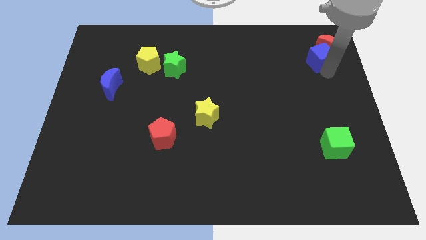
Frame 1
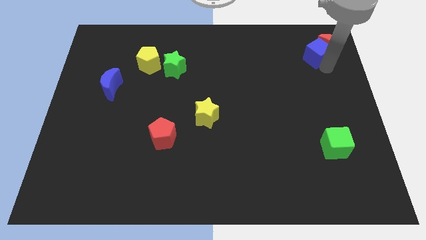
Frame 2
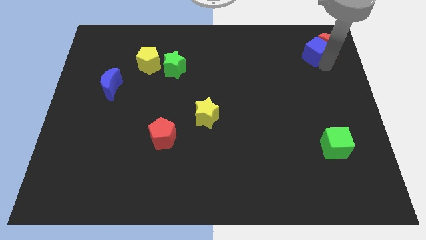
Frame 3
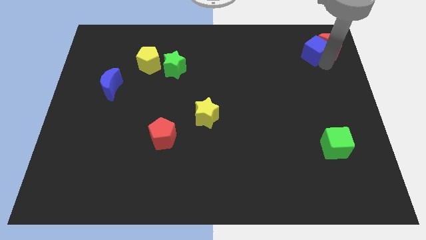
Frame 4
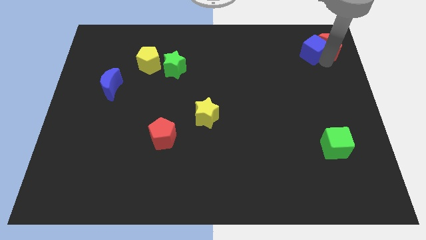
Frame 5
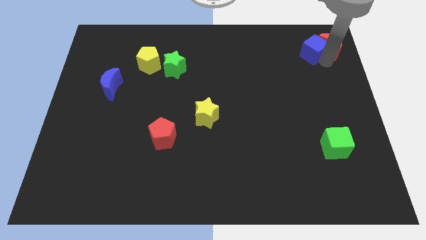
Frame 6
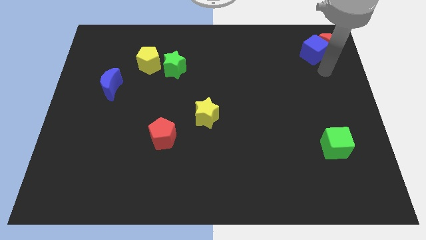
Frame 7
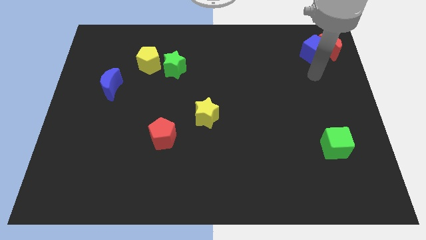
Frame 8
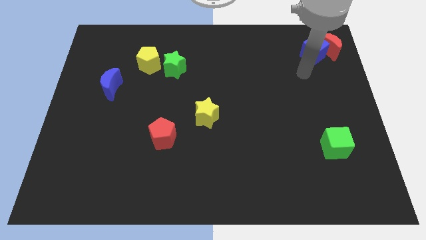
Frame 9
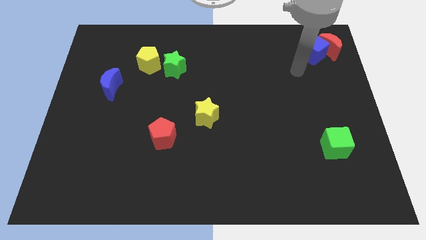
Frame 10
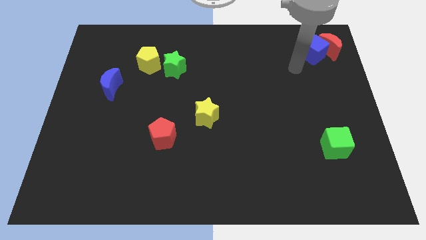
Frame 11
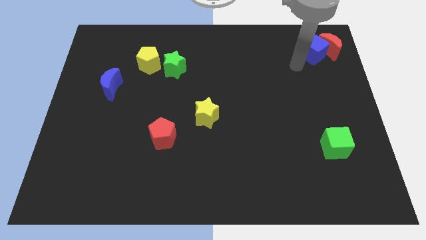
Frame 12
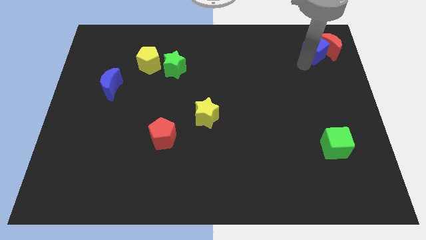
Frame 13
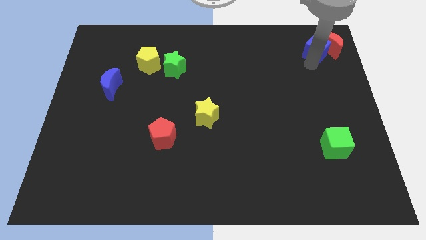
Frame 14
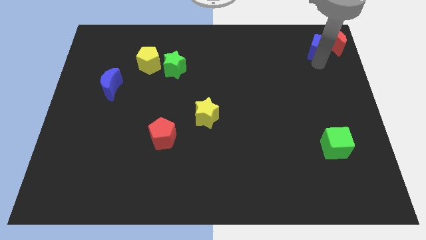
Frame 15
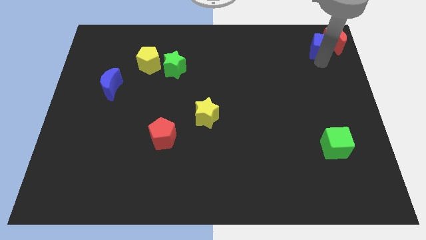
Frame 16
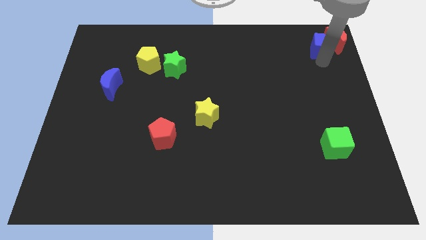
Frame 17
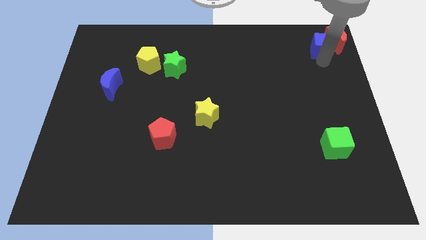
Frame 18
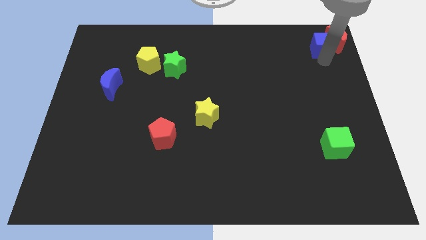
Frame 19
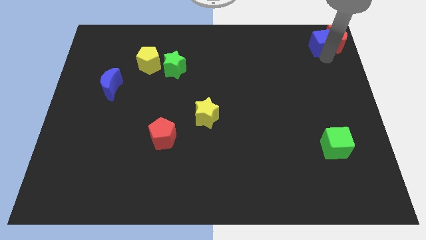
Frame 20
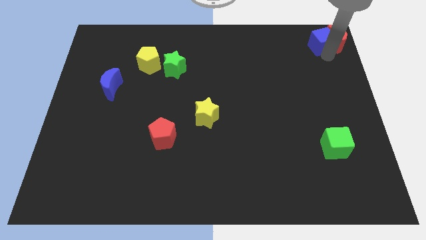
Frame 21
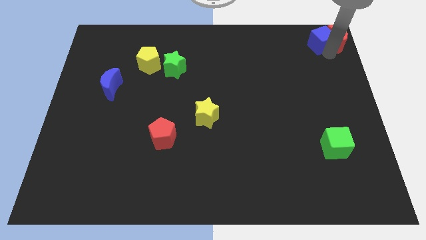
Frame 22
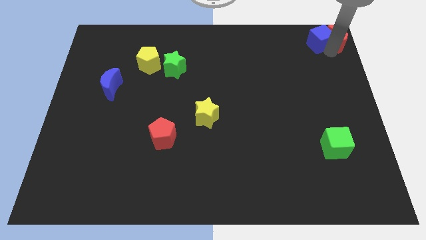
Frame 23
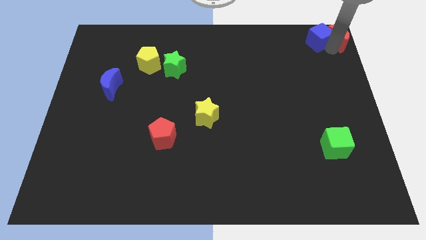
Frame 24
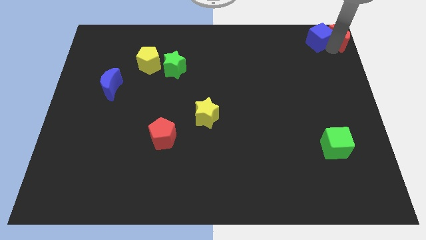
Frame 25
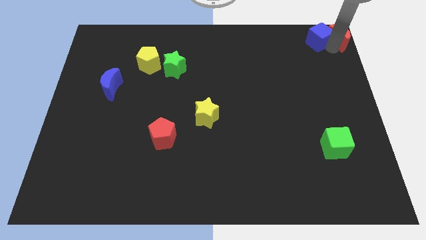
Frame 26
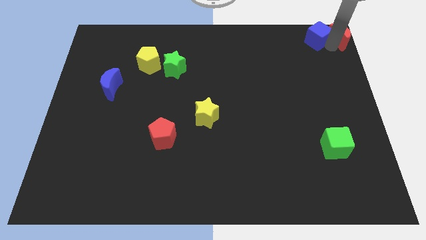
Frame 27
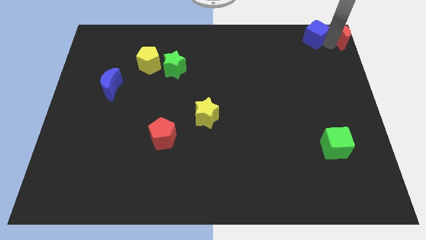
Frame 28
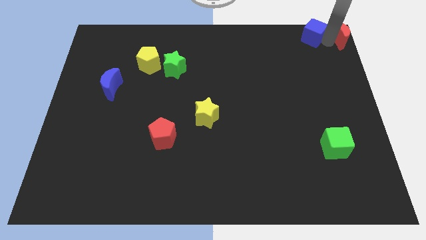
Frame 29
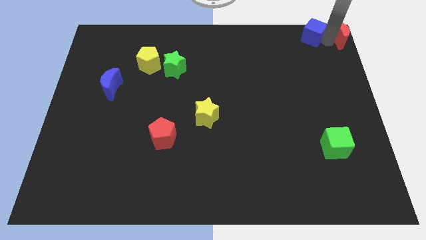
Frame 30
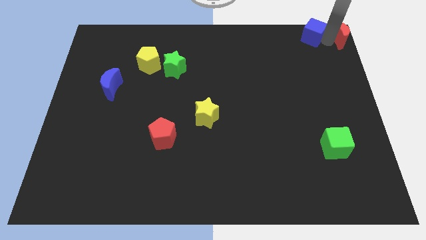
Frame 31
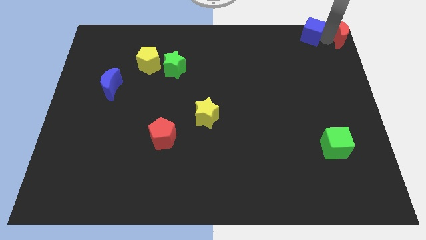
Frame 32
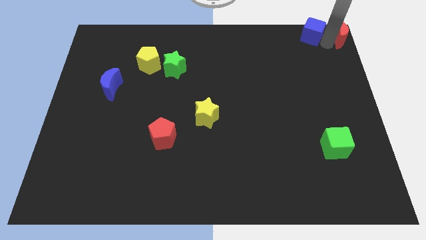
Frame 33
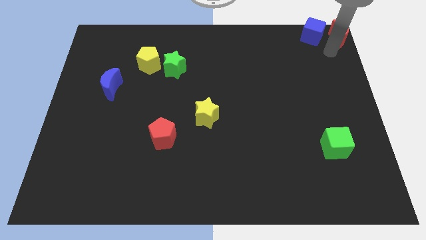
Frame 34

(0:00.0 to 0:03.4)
move blue cube along with red crescent to top right

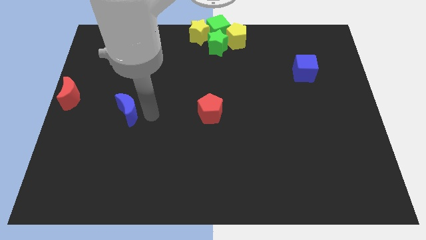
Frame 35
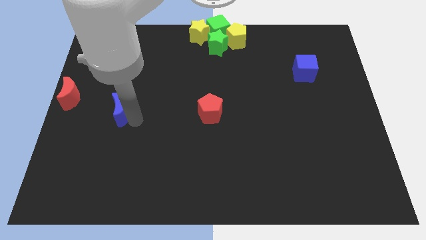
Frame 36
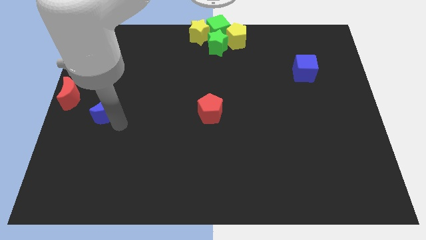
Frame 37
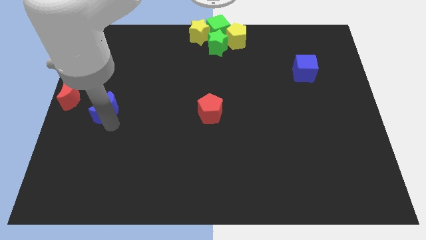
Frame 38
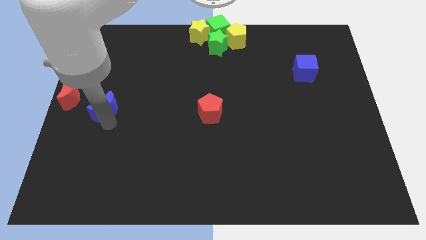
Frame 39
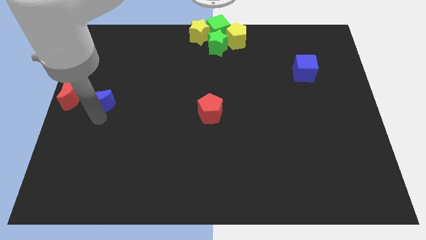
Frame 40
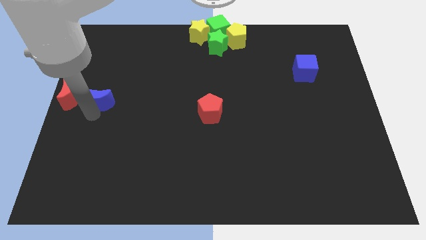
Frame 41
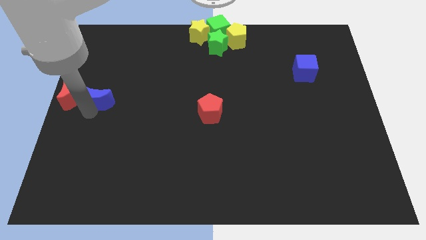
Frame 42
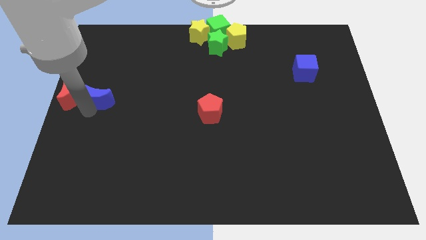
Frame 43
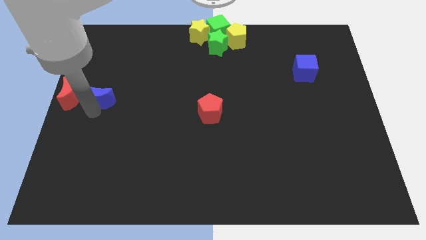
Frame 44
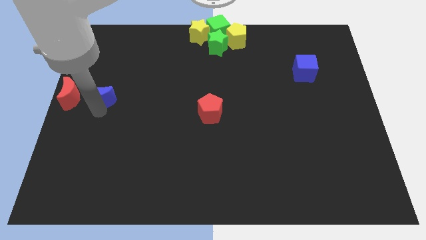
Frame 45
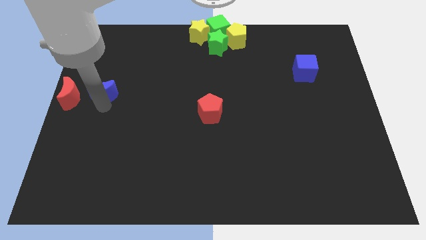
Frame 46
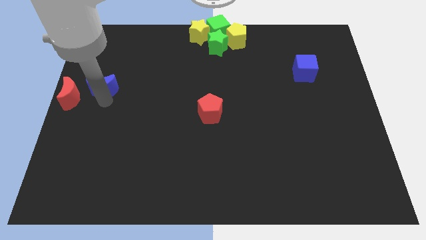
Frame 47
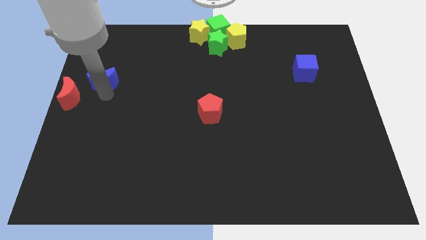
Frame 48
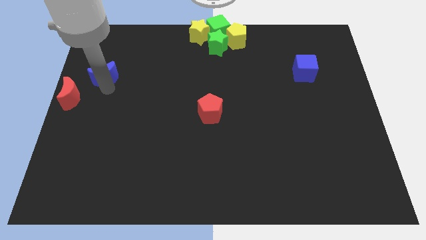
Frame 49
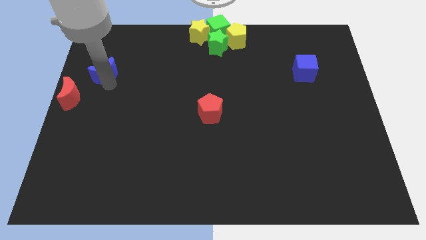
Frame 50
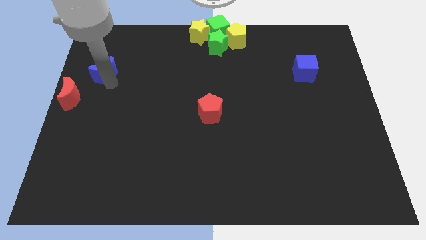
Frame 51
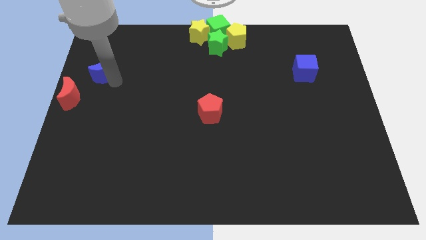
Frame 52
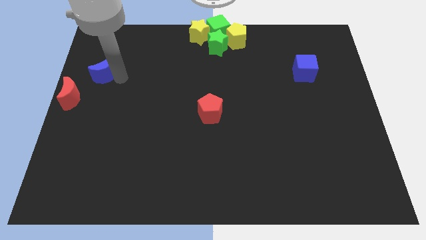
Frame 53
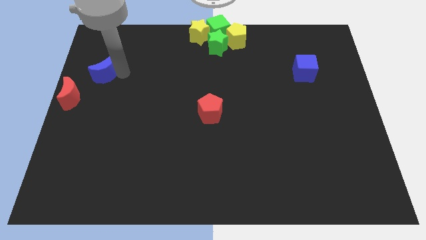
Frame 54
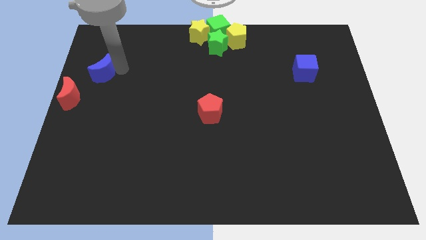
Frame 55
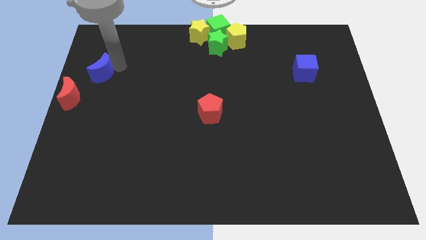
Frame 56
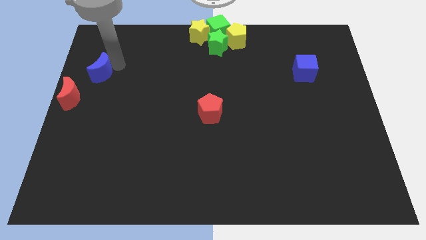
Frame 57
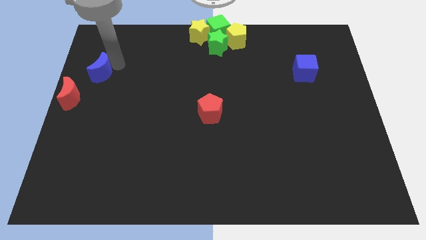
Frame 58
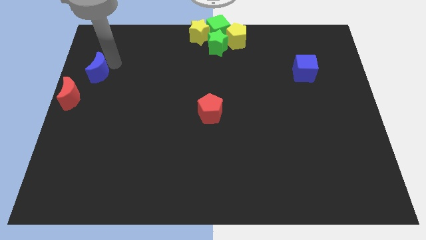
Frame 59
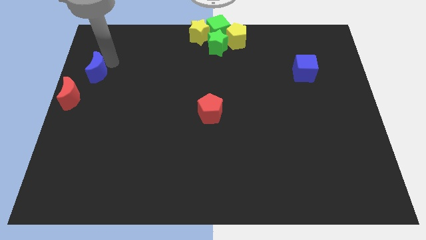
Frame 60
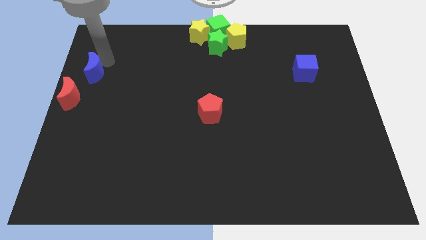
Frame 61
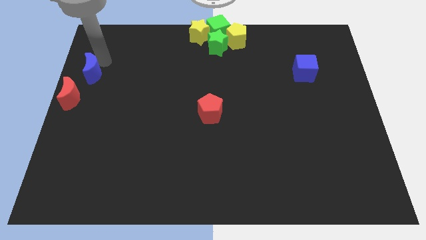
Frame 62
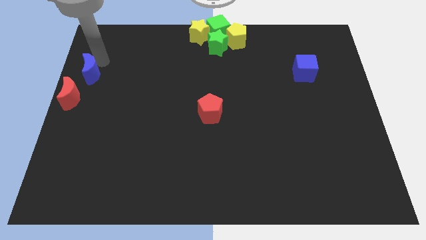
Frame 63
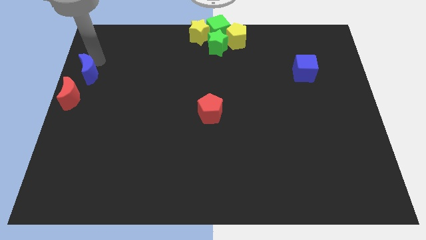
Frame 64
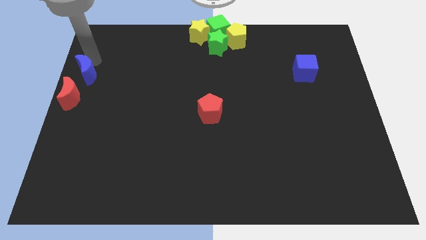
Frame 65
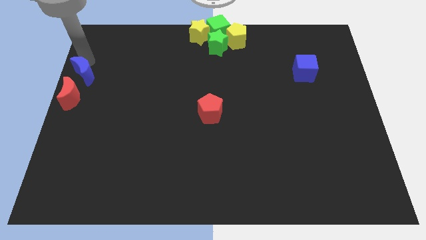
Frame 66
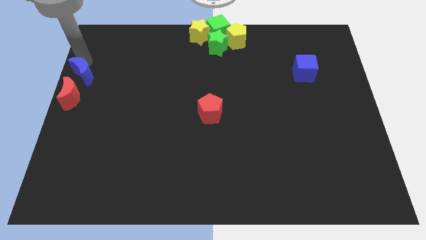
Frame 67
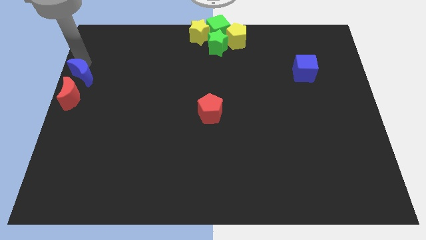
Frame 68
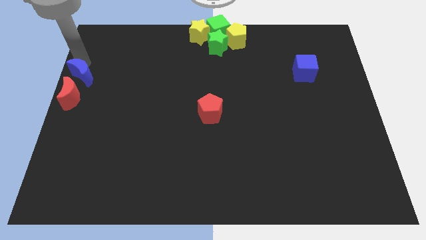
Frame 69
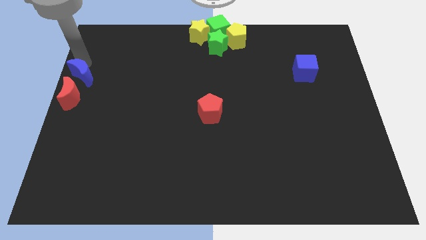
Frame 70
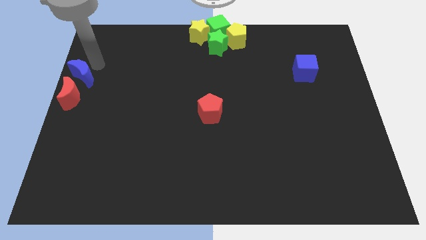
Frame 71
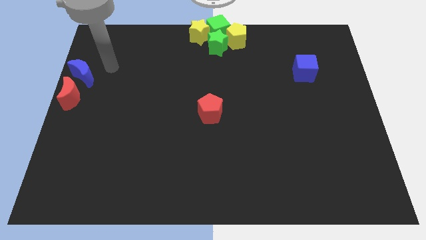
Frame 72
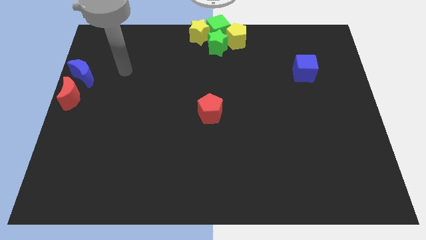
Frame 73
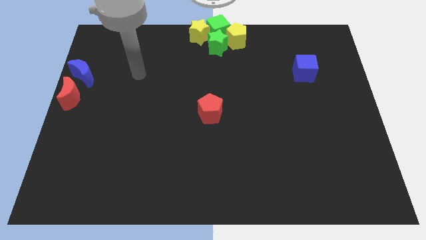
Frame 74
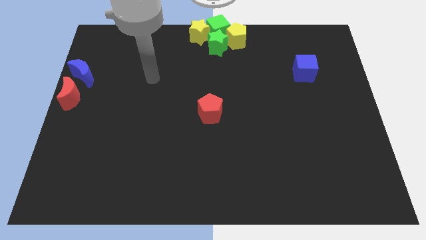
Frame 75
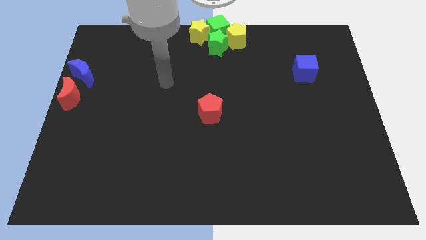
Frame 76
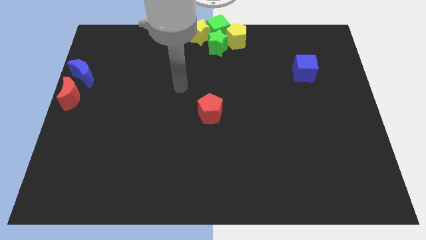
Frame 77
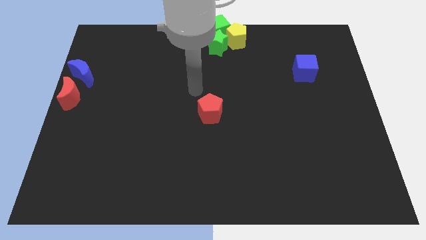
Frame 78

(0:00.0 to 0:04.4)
move the blue moon above the red moon

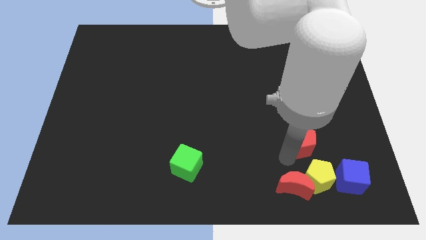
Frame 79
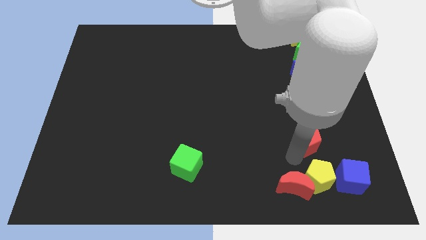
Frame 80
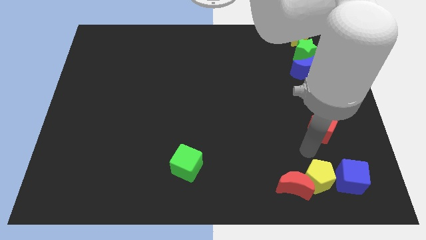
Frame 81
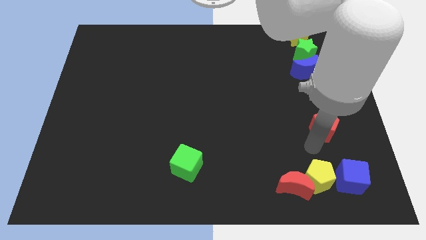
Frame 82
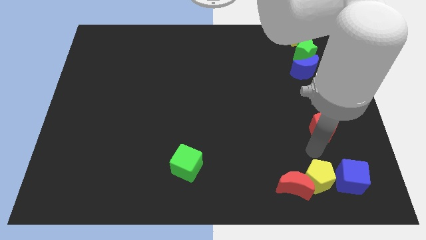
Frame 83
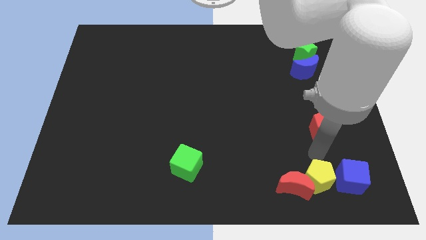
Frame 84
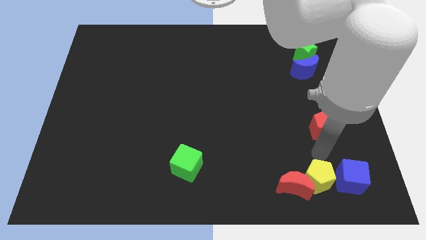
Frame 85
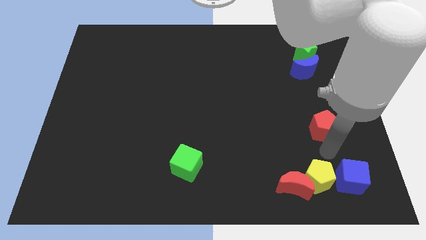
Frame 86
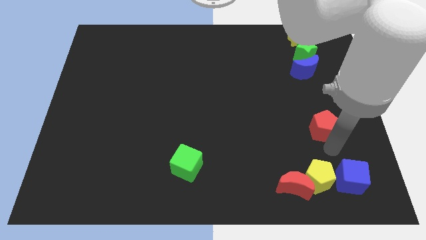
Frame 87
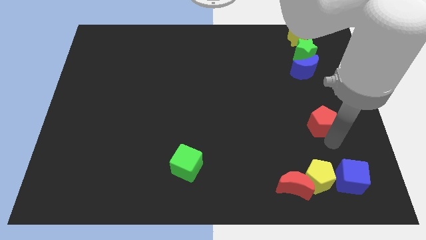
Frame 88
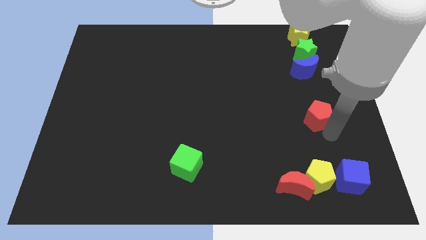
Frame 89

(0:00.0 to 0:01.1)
move red pentagon diagonally towards top
